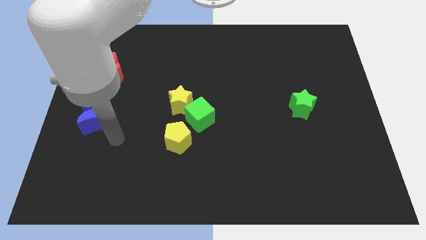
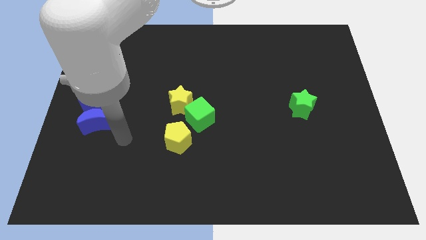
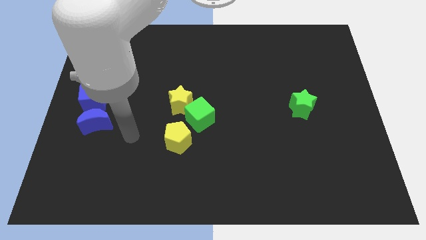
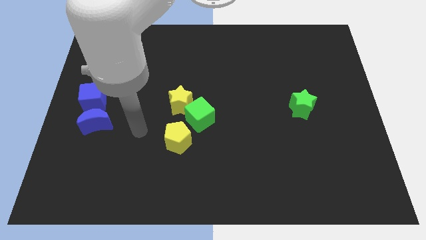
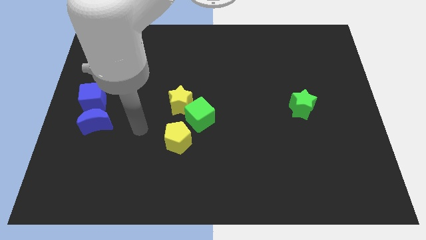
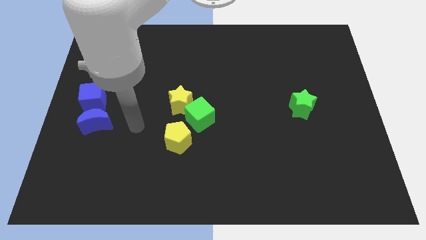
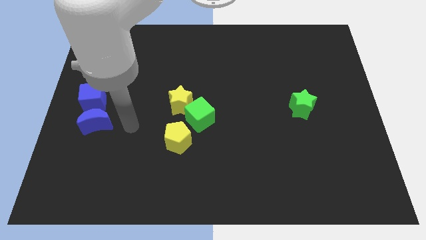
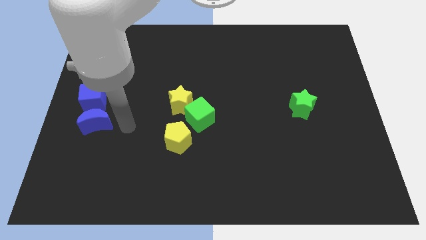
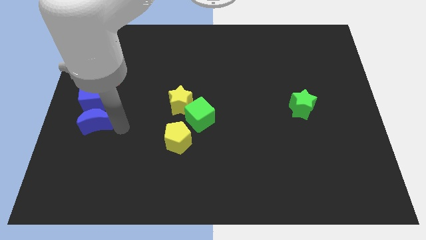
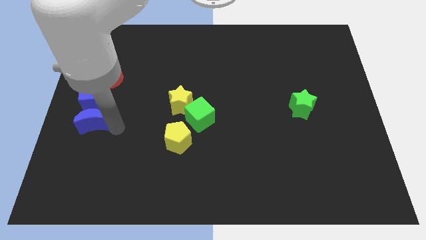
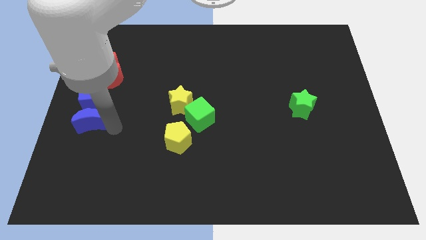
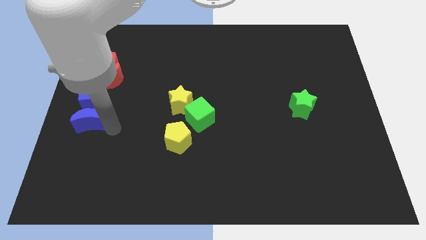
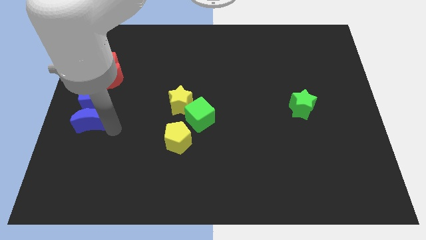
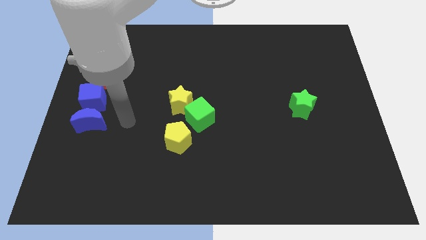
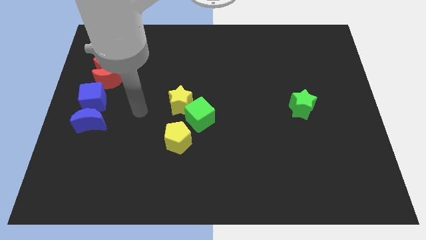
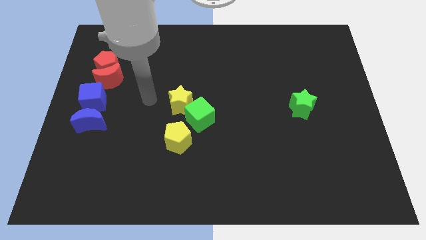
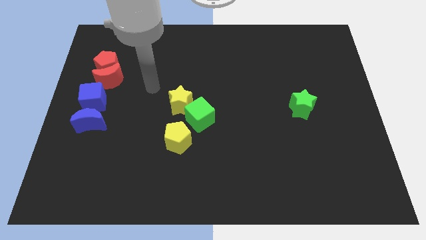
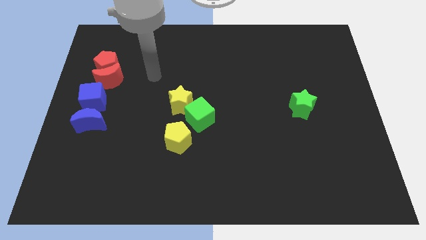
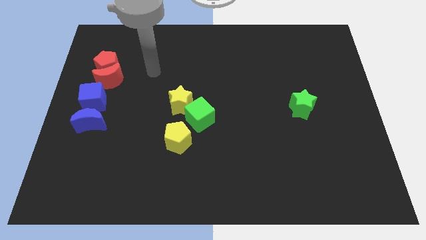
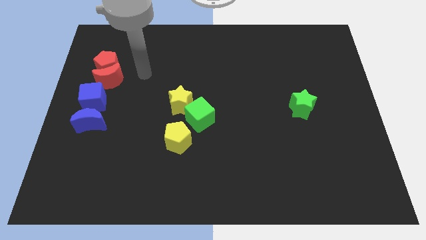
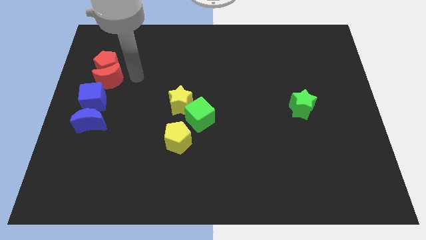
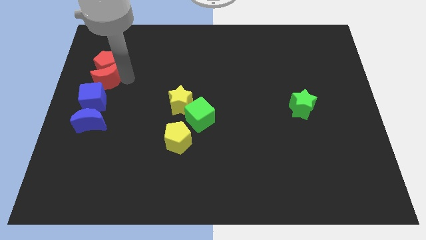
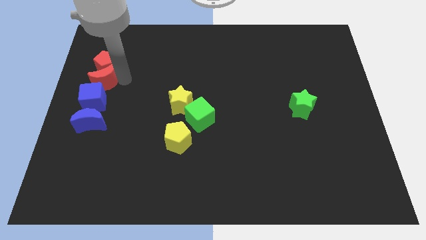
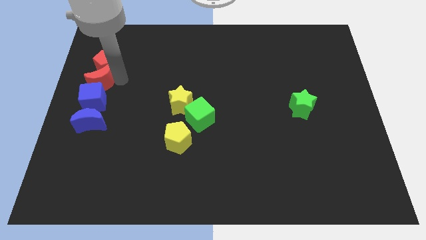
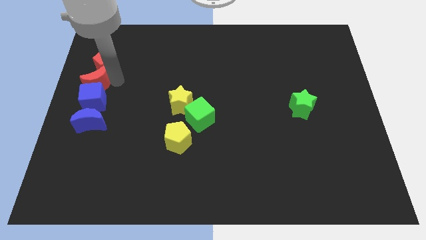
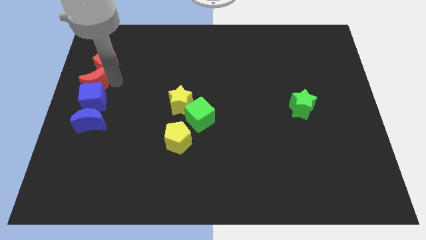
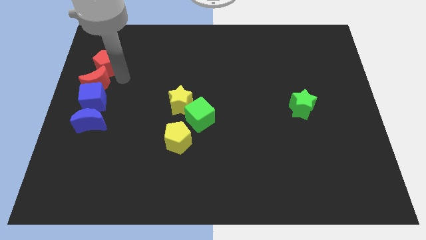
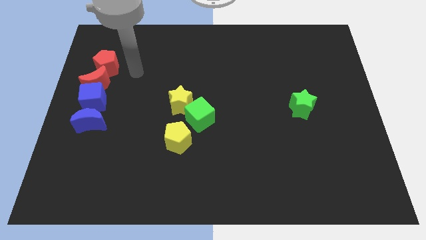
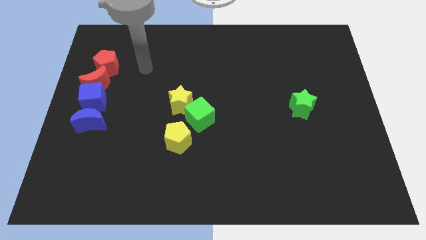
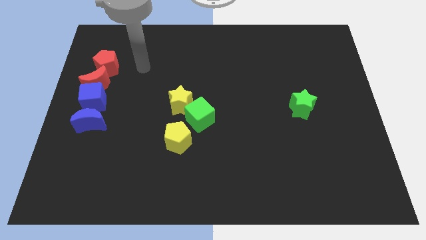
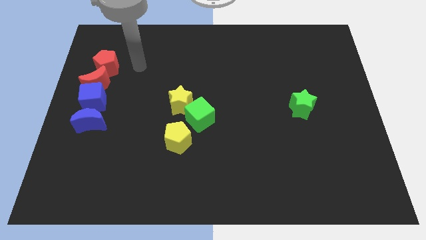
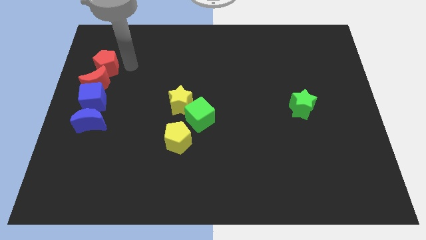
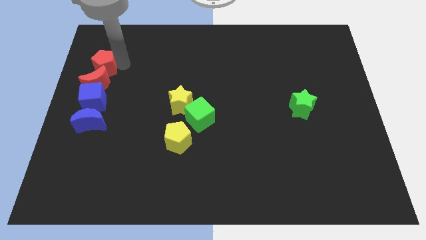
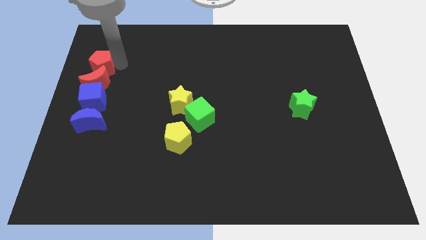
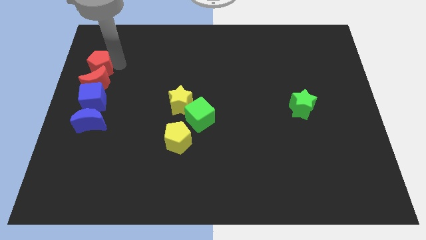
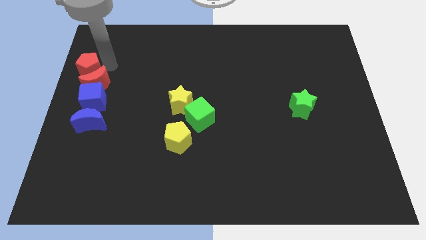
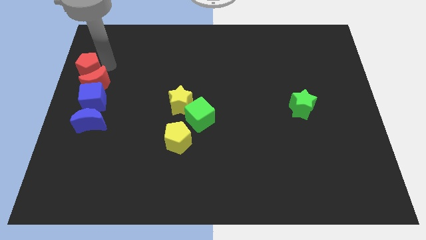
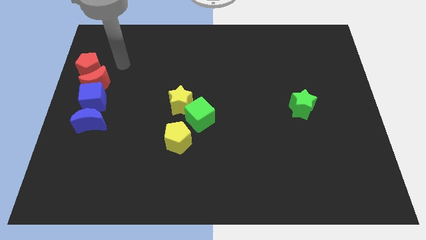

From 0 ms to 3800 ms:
adjust the blue crescent red crescent and red pentagon at the left side of the table

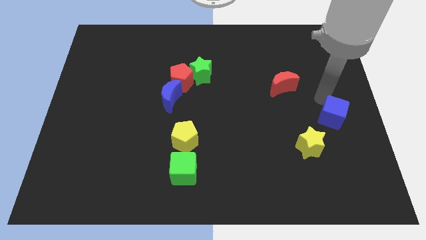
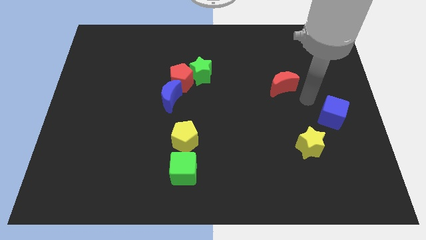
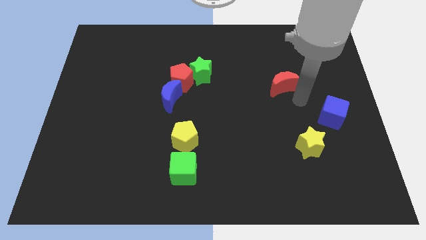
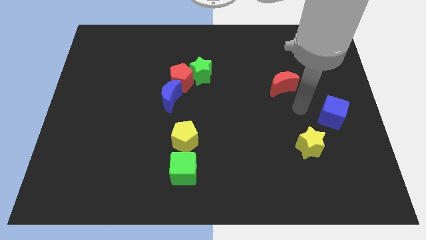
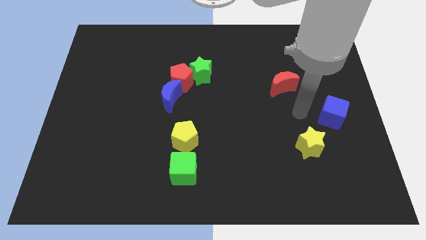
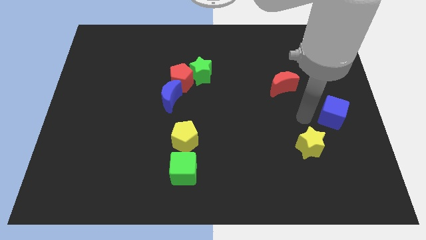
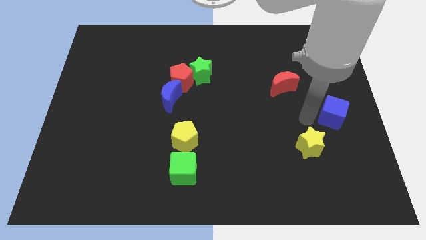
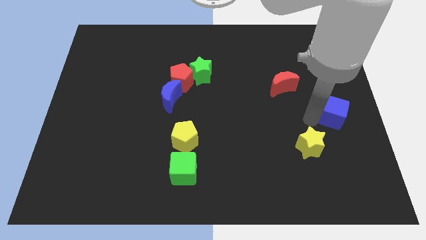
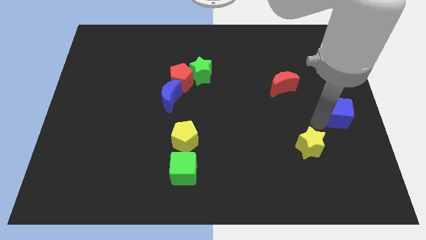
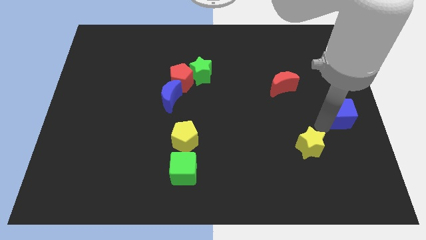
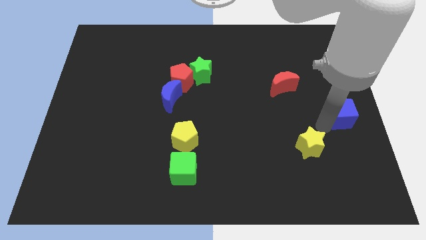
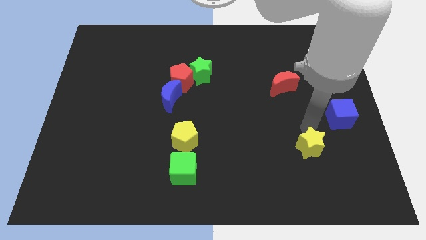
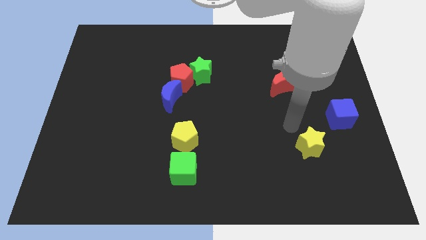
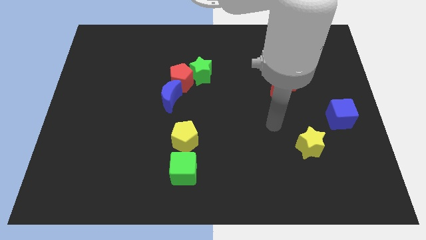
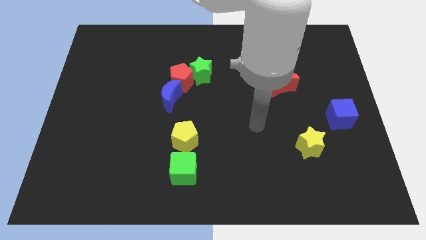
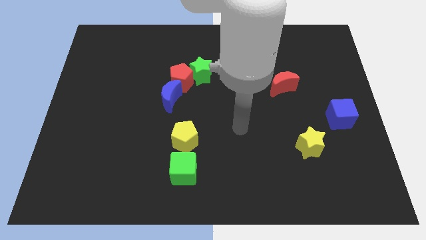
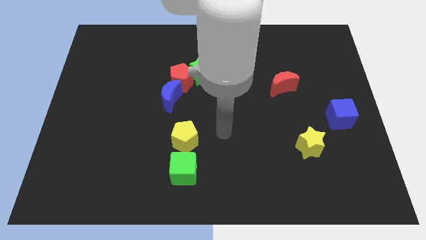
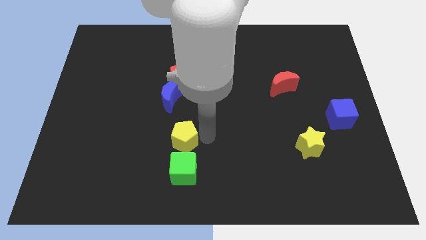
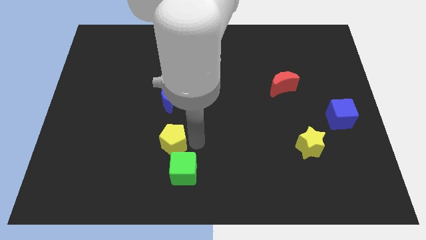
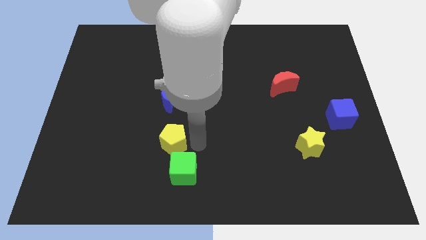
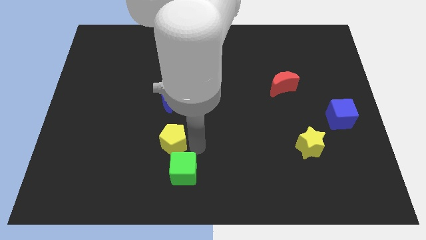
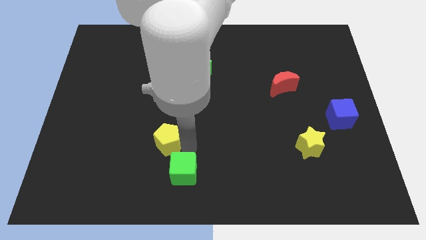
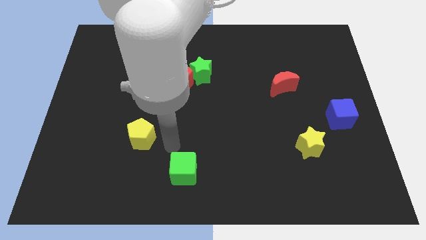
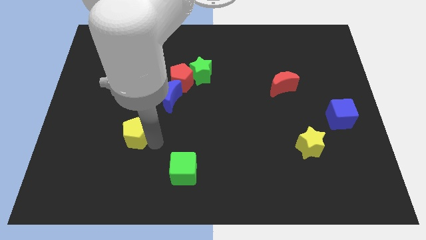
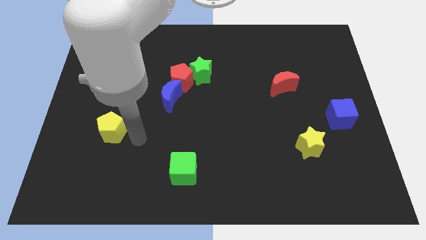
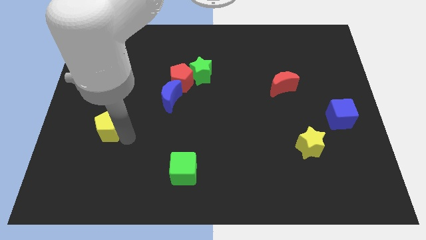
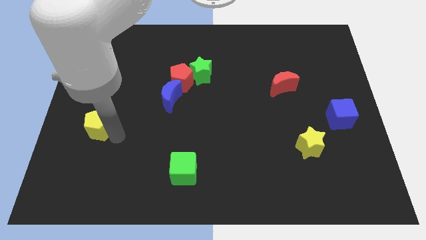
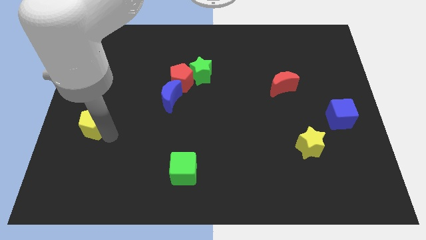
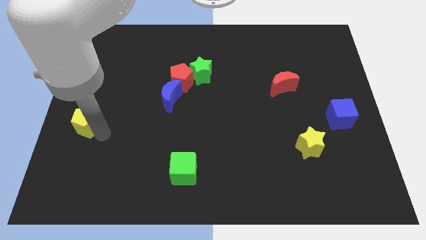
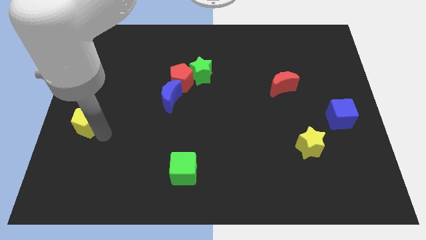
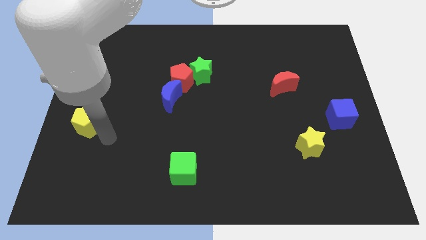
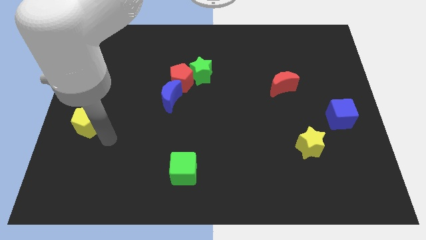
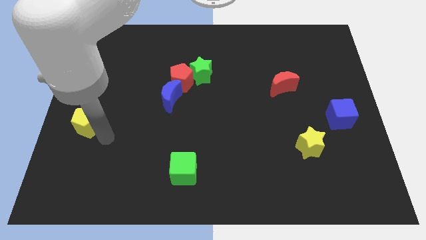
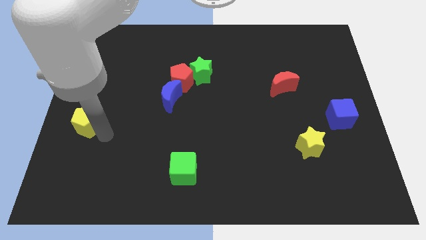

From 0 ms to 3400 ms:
move the blue cube to right side

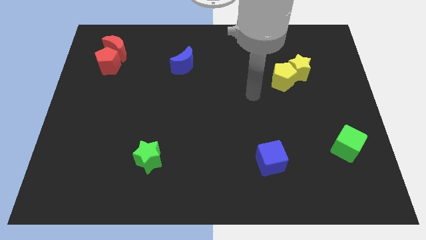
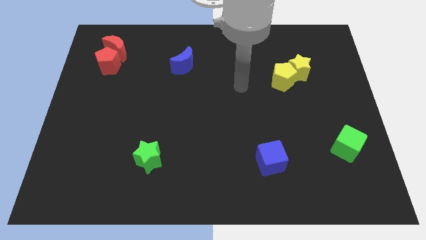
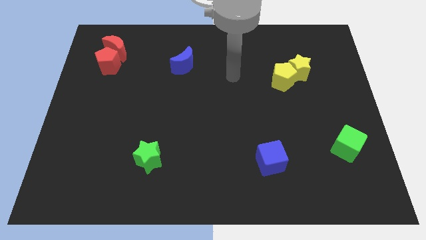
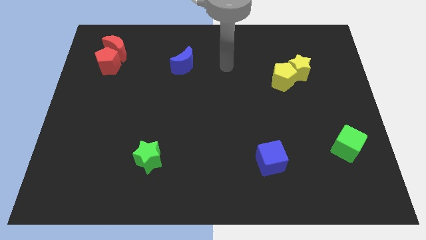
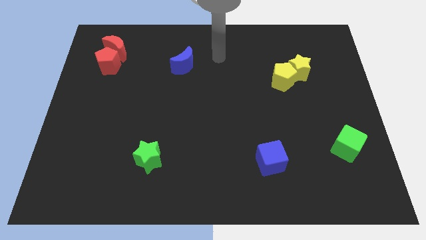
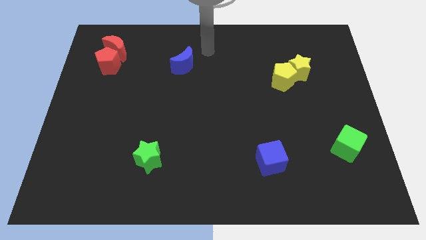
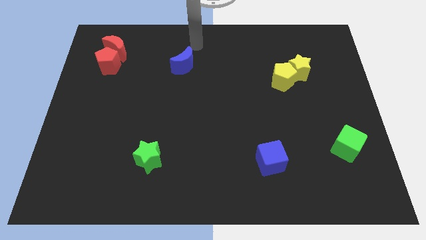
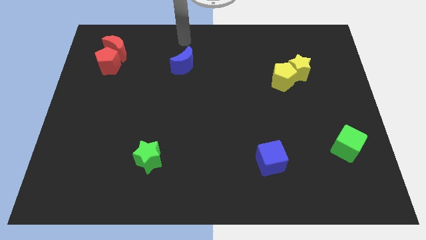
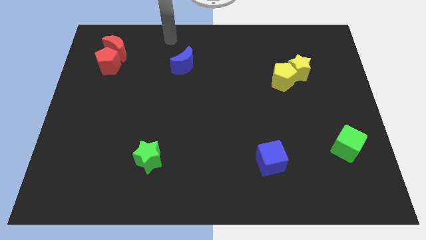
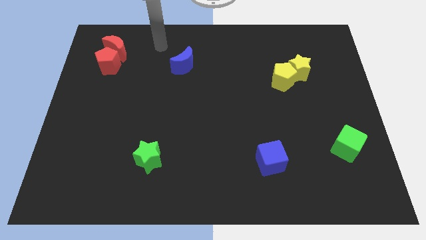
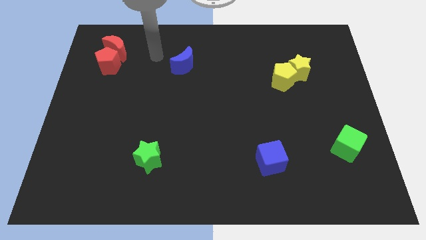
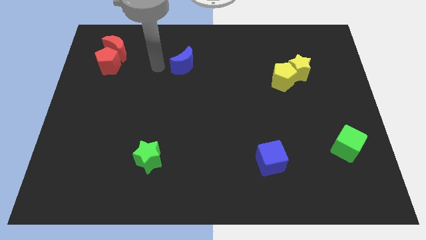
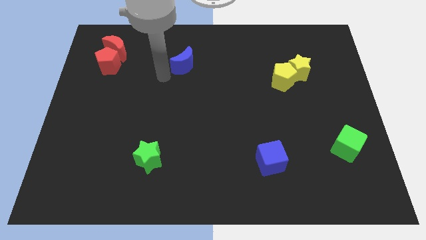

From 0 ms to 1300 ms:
place your arm at the left of the blue crescent

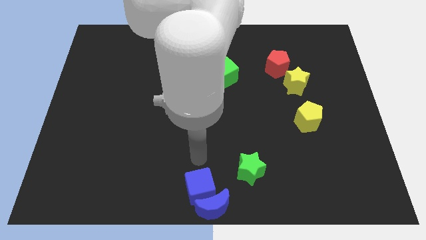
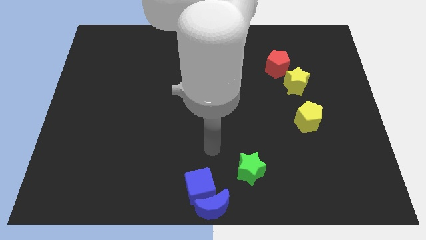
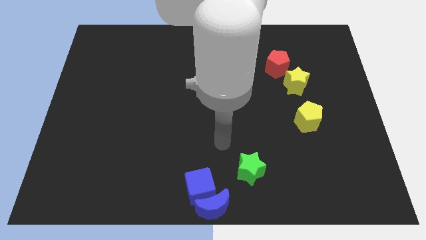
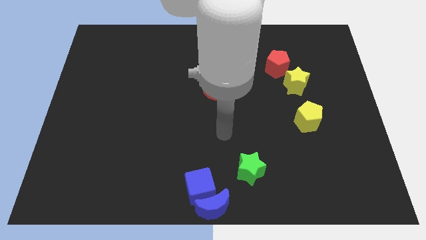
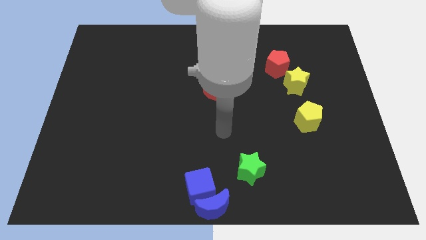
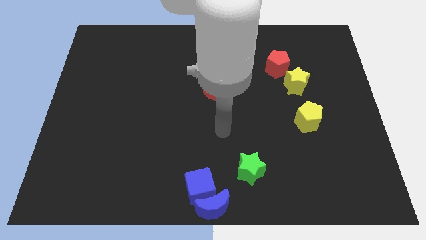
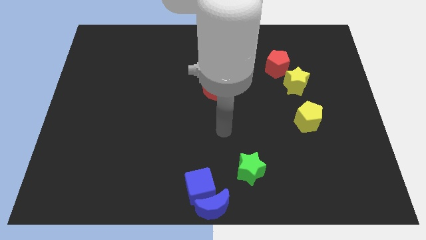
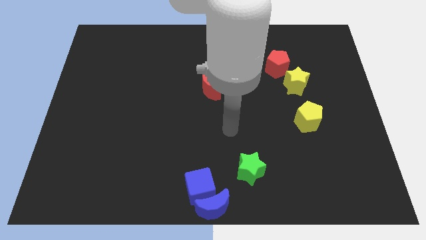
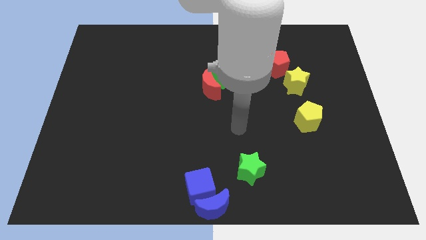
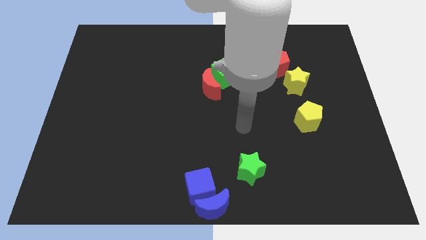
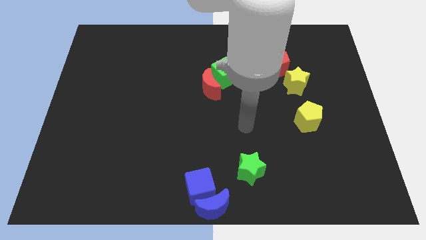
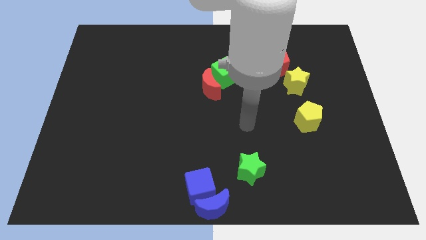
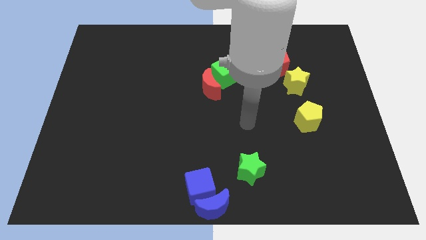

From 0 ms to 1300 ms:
place your arm at the left of the yellow pentagon
